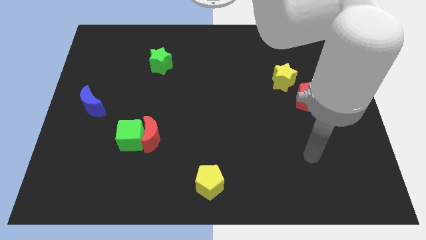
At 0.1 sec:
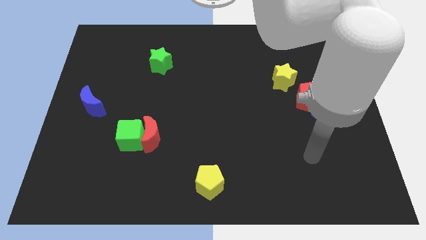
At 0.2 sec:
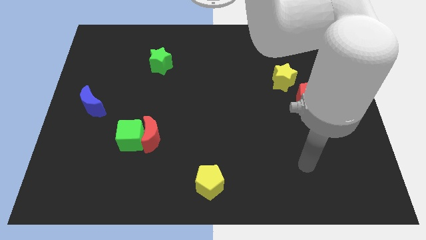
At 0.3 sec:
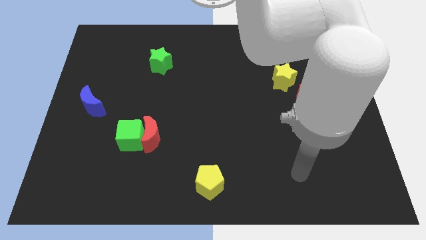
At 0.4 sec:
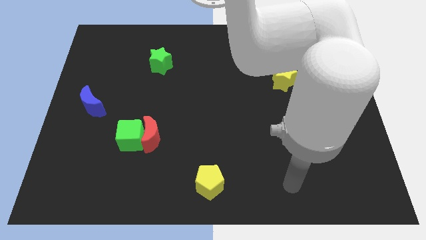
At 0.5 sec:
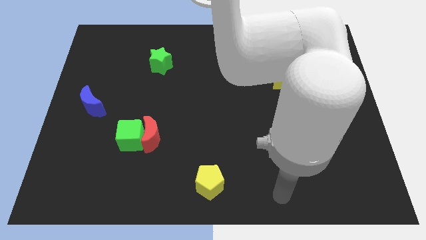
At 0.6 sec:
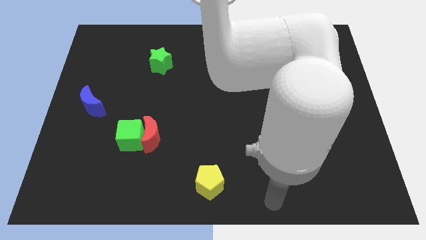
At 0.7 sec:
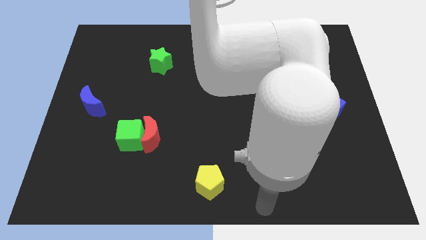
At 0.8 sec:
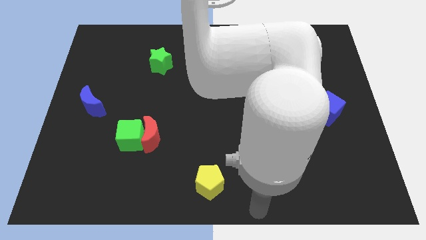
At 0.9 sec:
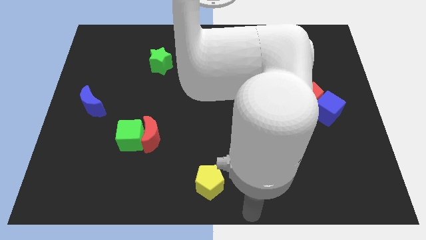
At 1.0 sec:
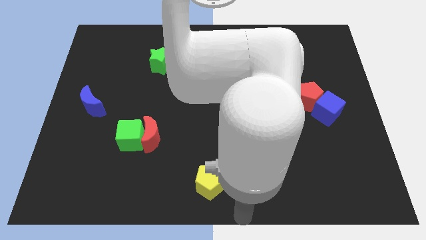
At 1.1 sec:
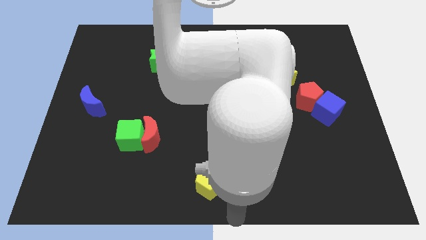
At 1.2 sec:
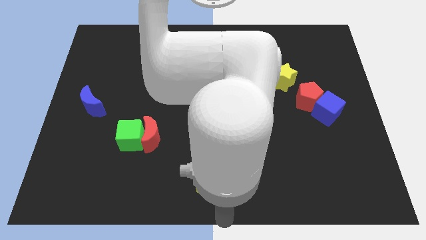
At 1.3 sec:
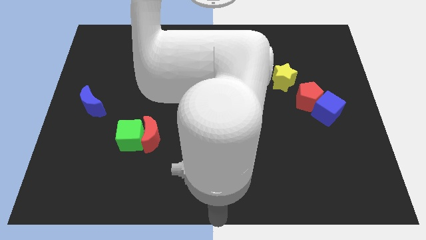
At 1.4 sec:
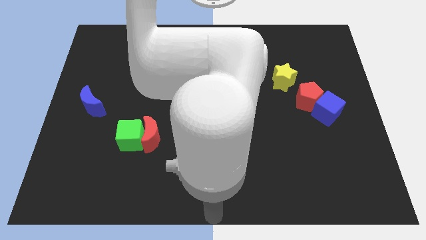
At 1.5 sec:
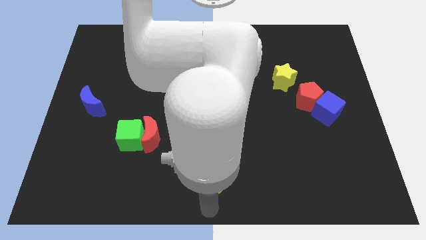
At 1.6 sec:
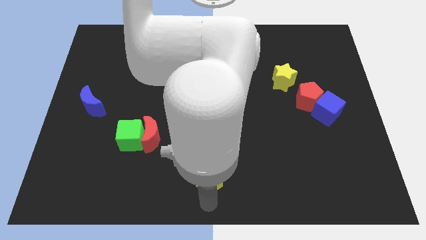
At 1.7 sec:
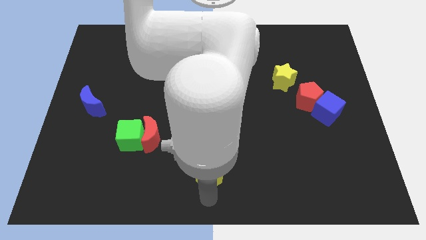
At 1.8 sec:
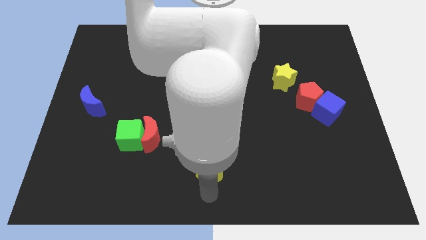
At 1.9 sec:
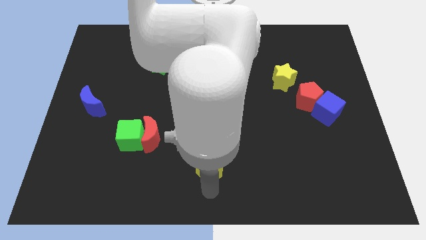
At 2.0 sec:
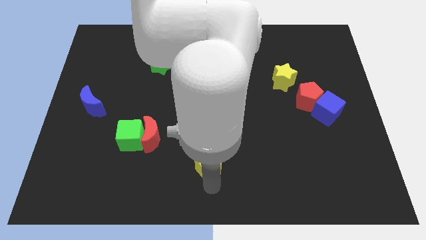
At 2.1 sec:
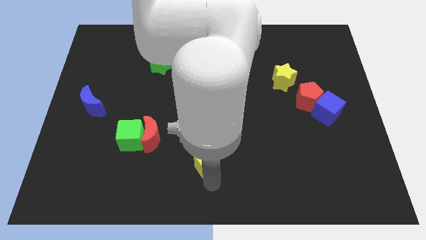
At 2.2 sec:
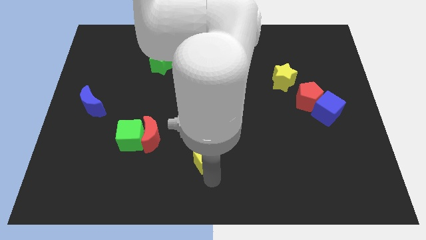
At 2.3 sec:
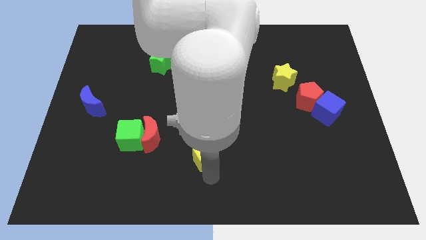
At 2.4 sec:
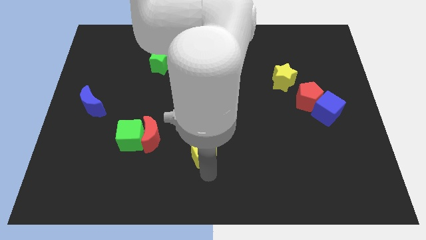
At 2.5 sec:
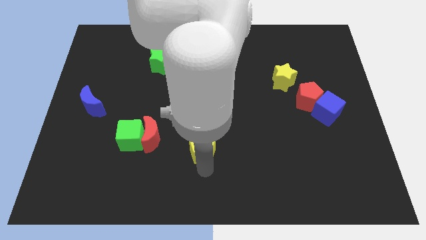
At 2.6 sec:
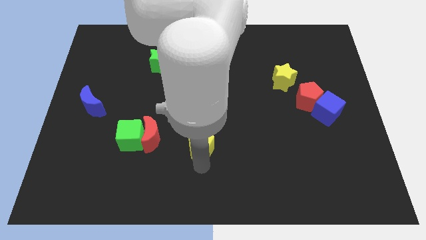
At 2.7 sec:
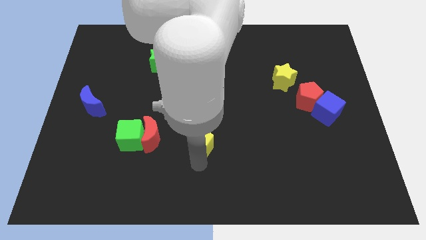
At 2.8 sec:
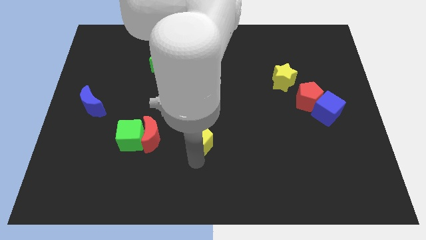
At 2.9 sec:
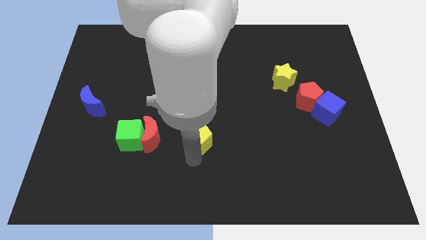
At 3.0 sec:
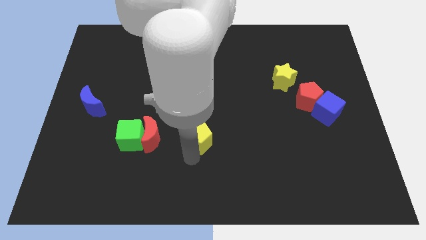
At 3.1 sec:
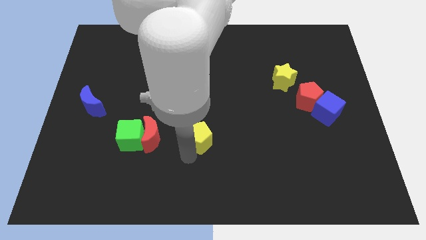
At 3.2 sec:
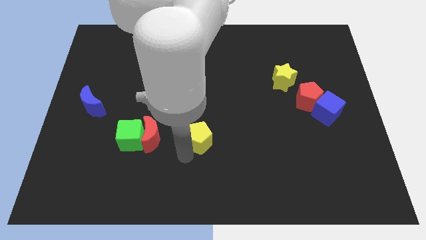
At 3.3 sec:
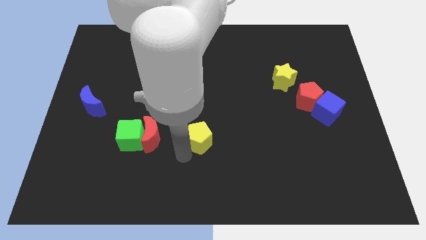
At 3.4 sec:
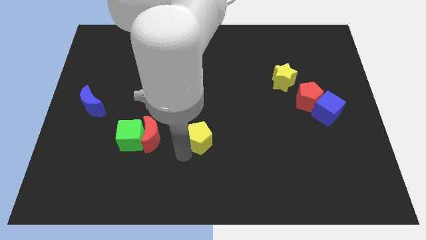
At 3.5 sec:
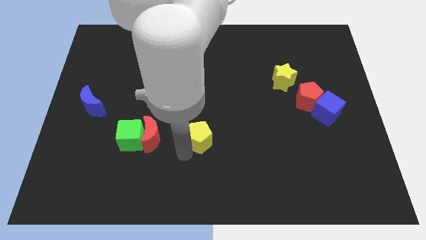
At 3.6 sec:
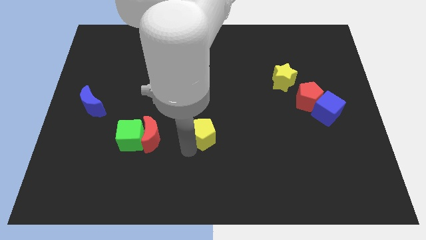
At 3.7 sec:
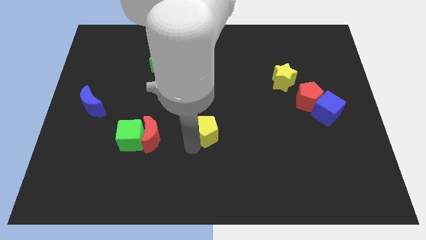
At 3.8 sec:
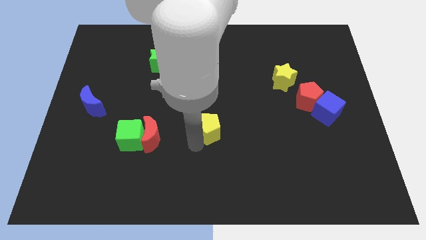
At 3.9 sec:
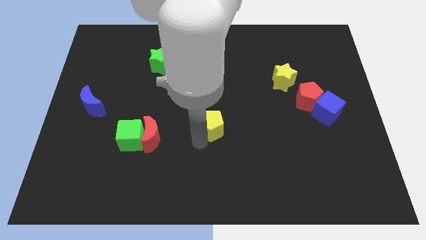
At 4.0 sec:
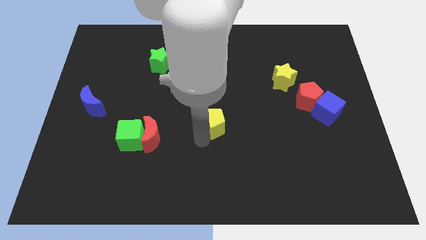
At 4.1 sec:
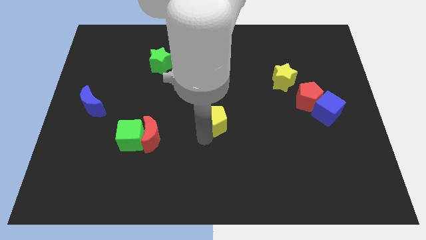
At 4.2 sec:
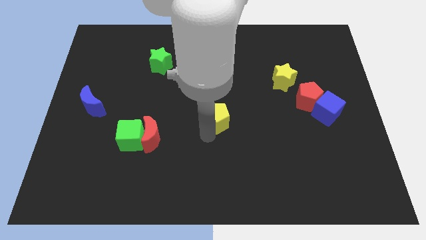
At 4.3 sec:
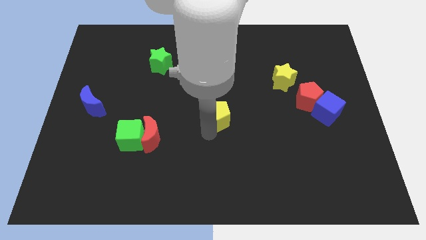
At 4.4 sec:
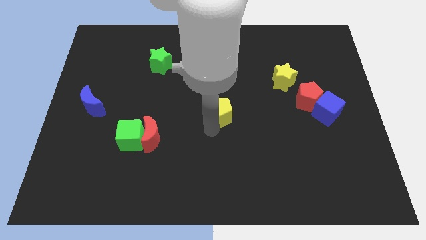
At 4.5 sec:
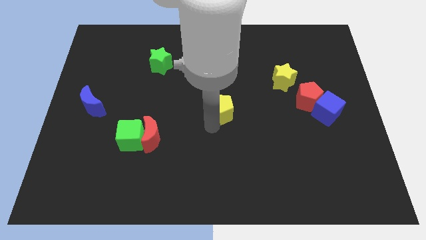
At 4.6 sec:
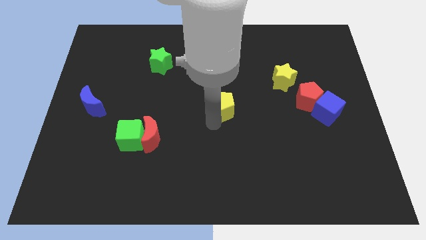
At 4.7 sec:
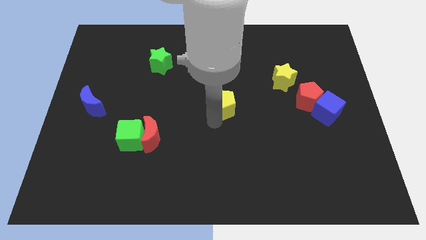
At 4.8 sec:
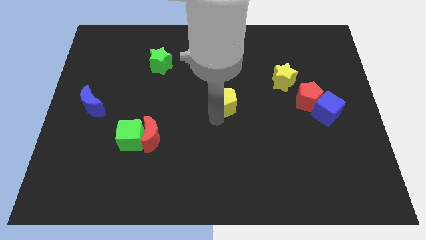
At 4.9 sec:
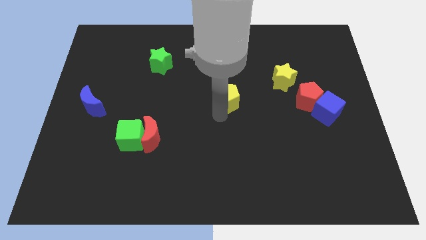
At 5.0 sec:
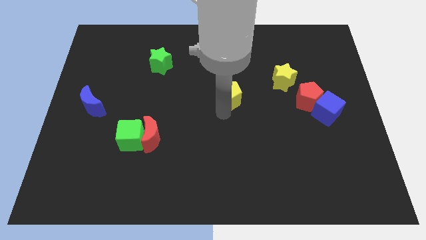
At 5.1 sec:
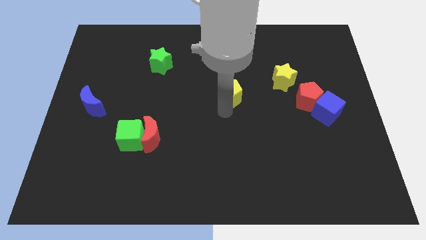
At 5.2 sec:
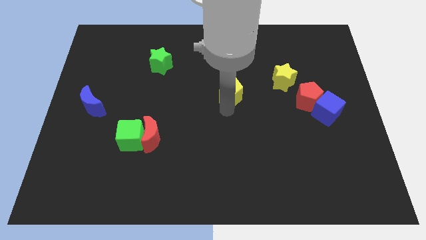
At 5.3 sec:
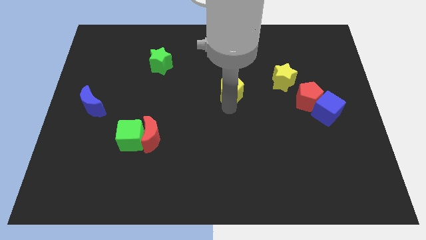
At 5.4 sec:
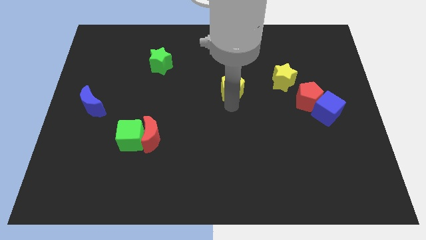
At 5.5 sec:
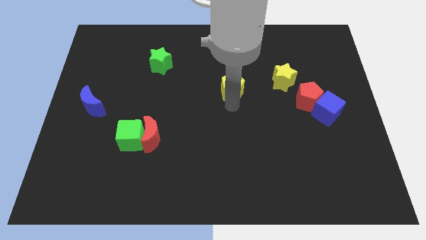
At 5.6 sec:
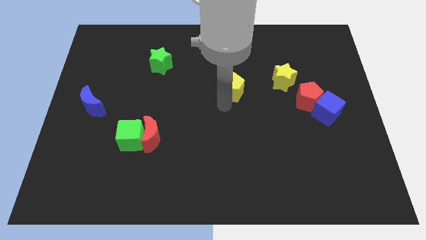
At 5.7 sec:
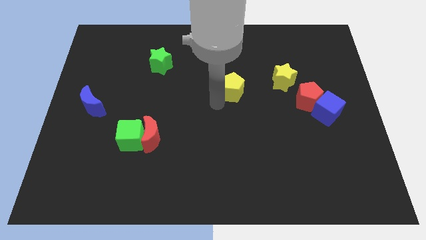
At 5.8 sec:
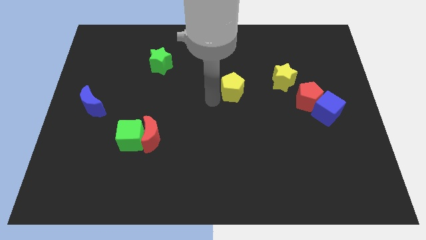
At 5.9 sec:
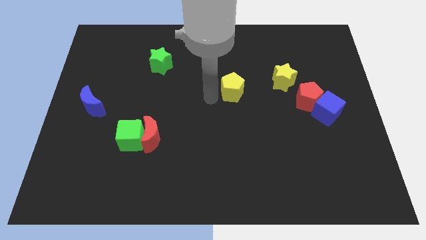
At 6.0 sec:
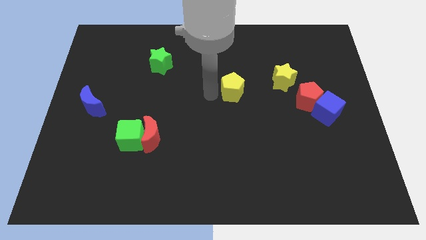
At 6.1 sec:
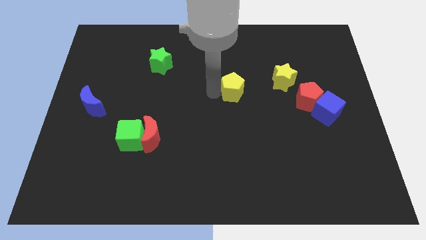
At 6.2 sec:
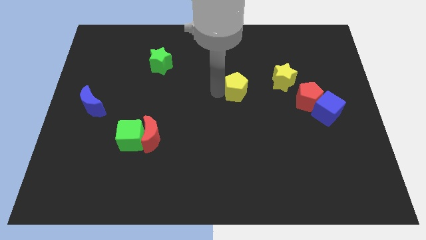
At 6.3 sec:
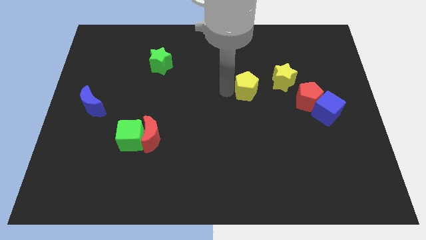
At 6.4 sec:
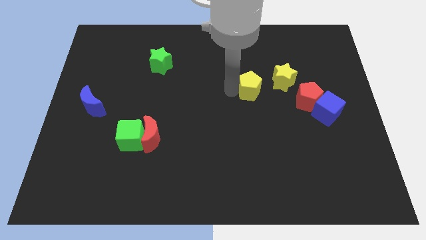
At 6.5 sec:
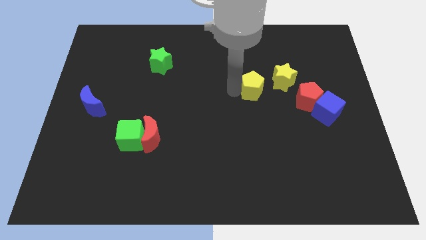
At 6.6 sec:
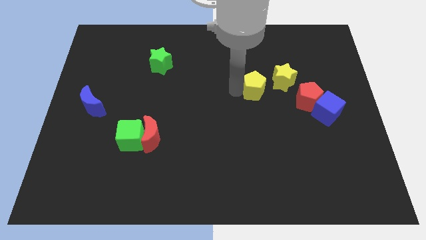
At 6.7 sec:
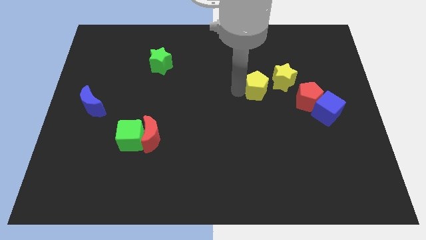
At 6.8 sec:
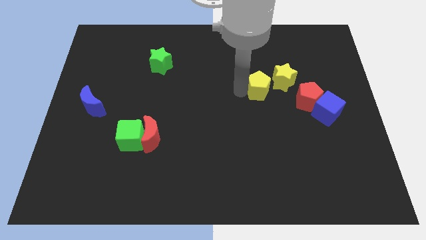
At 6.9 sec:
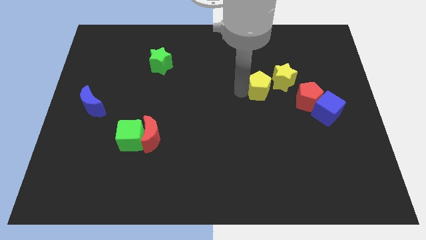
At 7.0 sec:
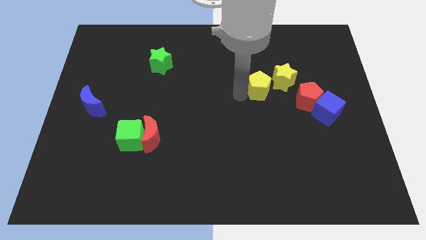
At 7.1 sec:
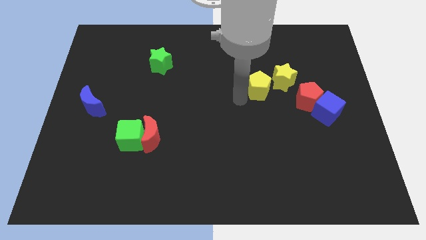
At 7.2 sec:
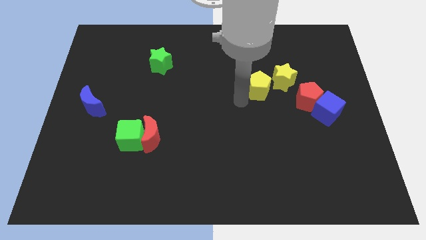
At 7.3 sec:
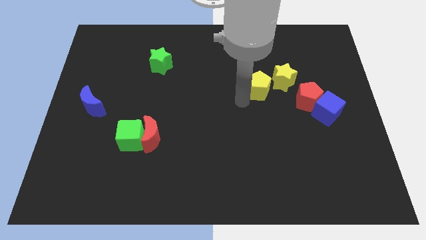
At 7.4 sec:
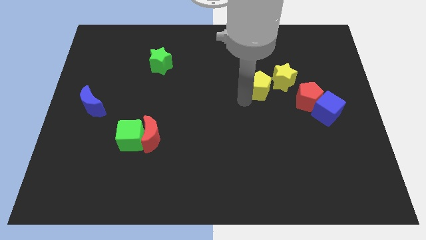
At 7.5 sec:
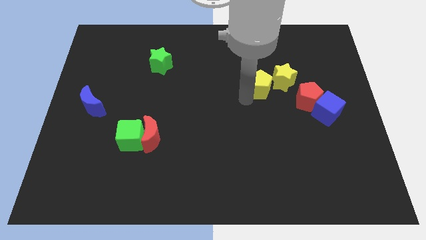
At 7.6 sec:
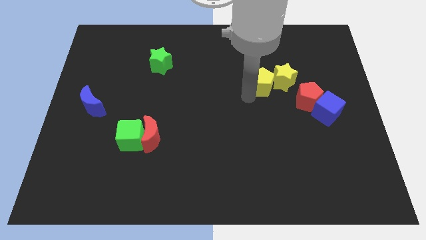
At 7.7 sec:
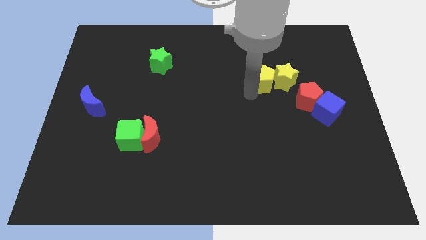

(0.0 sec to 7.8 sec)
put the yellow pentagon towards the yellow star

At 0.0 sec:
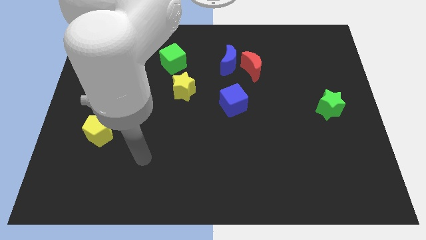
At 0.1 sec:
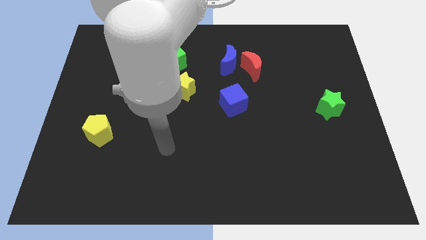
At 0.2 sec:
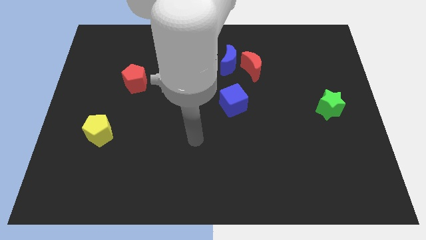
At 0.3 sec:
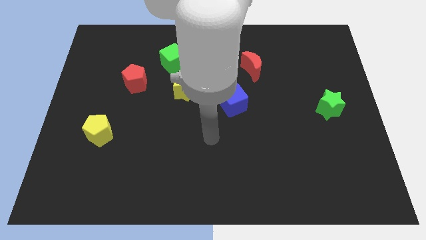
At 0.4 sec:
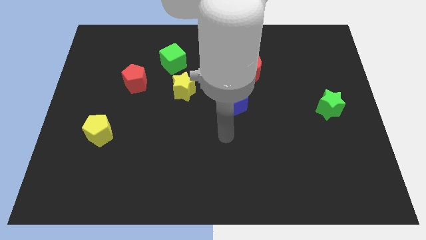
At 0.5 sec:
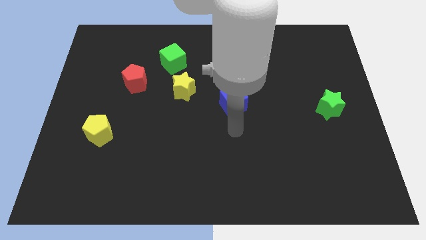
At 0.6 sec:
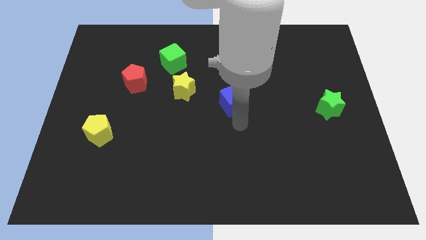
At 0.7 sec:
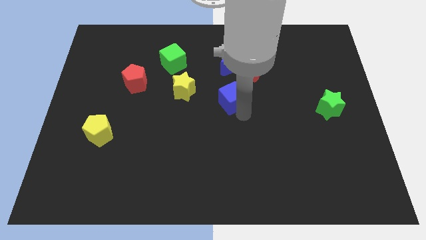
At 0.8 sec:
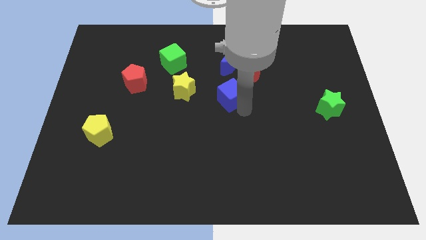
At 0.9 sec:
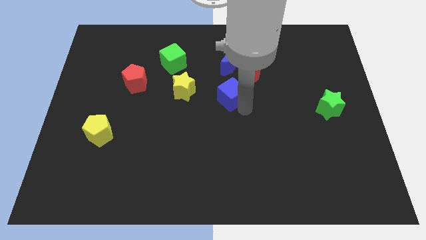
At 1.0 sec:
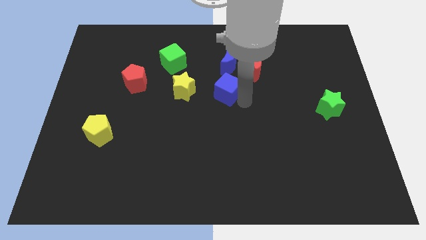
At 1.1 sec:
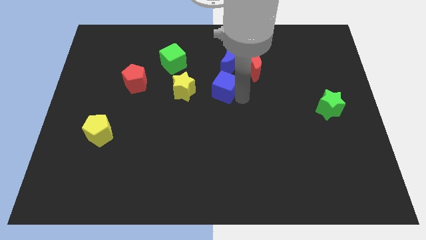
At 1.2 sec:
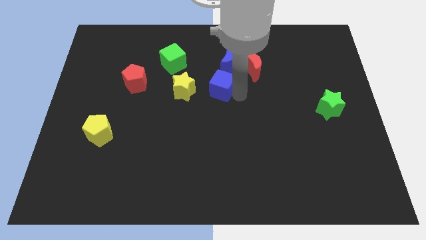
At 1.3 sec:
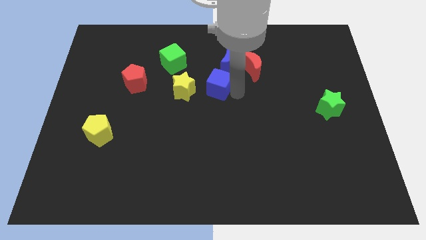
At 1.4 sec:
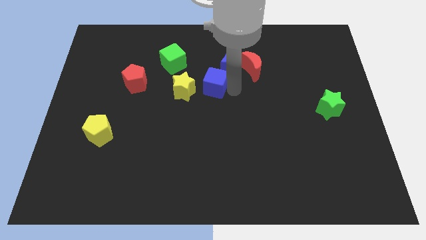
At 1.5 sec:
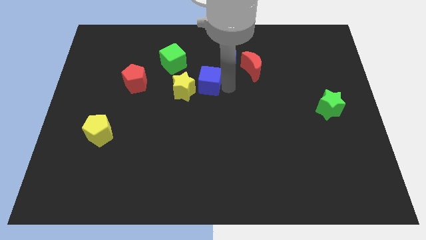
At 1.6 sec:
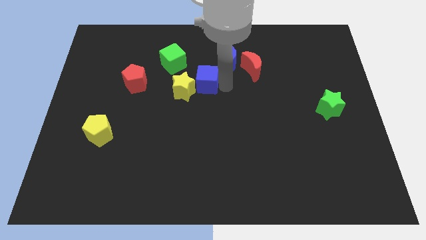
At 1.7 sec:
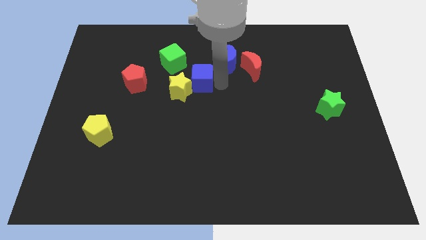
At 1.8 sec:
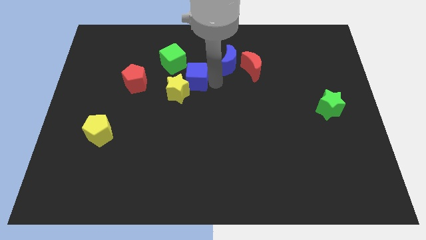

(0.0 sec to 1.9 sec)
put the blue cube to the yellow star
